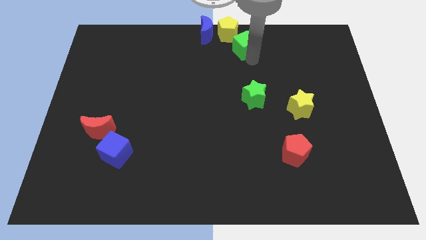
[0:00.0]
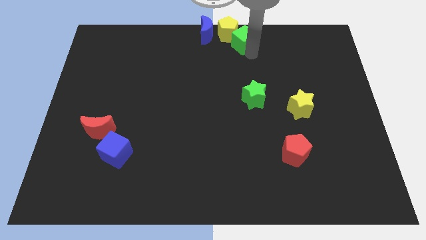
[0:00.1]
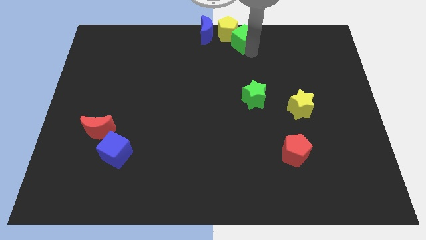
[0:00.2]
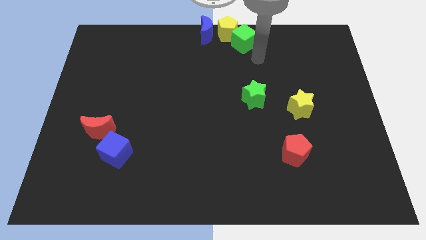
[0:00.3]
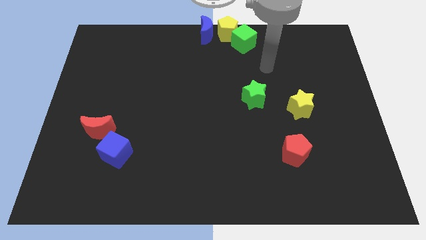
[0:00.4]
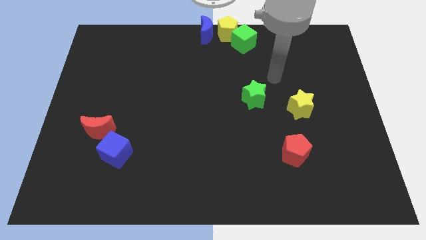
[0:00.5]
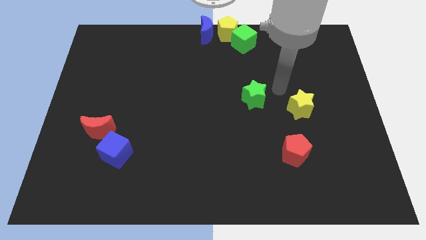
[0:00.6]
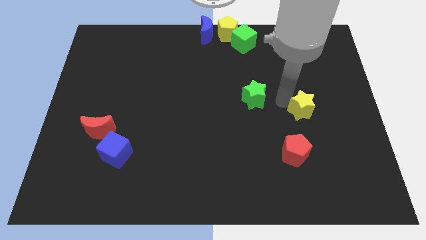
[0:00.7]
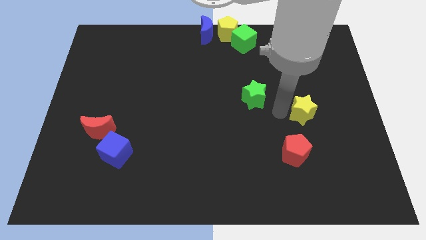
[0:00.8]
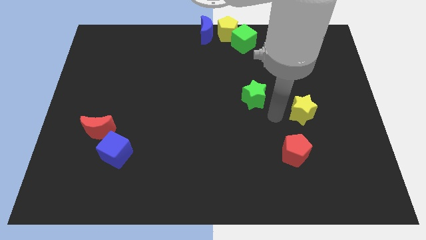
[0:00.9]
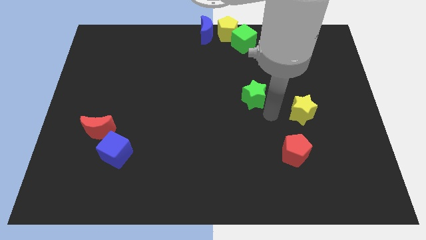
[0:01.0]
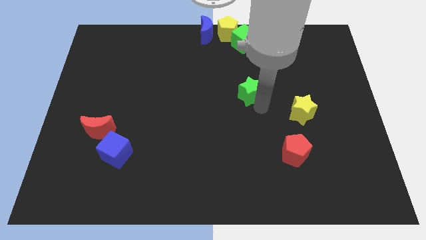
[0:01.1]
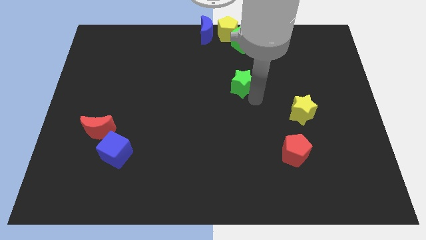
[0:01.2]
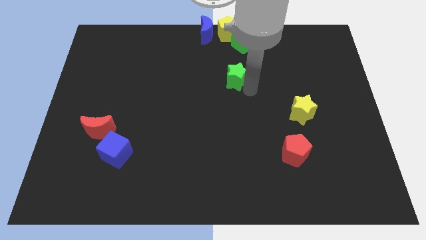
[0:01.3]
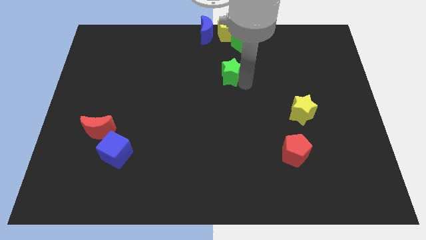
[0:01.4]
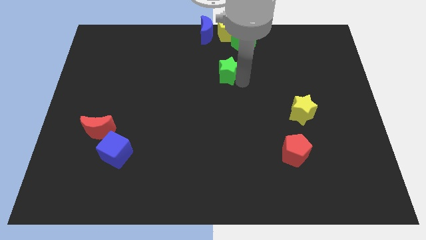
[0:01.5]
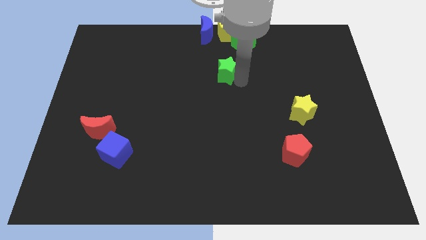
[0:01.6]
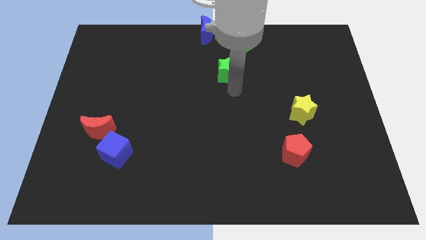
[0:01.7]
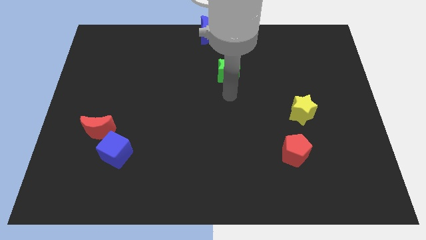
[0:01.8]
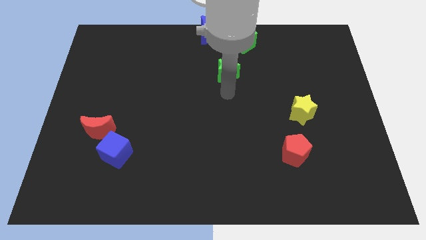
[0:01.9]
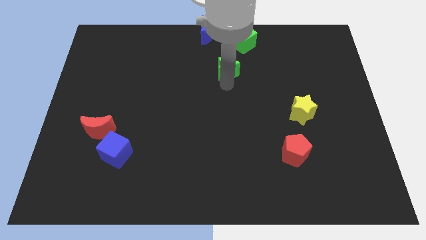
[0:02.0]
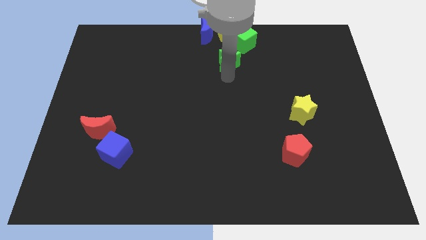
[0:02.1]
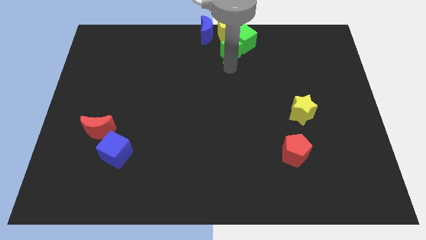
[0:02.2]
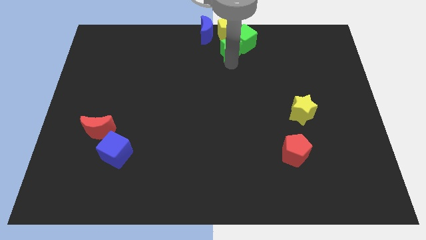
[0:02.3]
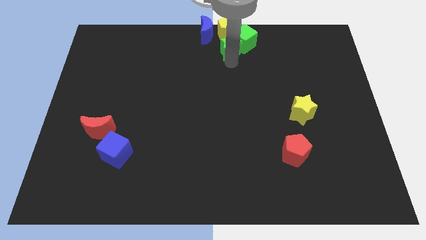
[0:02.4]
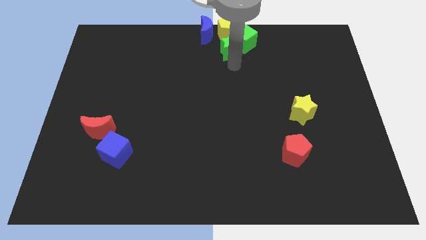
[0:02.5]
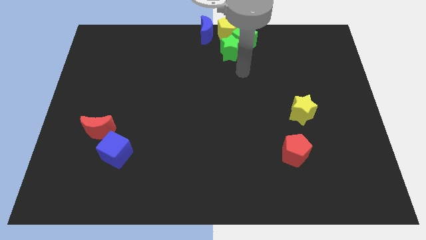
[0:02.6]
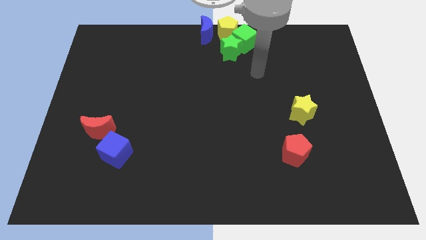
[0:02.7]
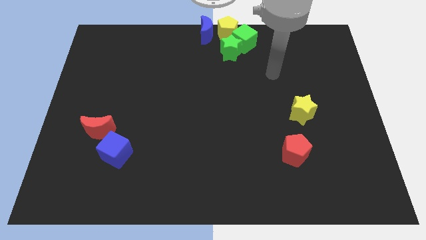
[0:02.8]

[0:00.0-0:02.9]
separate green star from yellow star

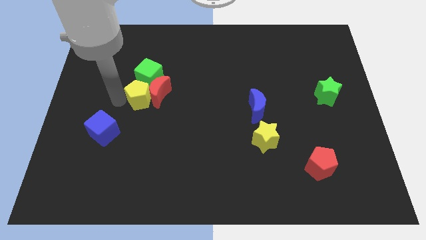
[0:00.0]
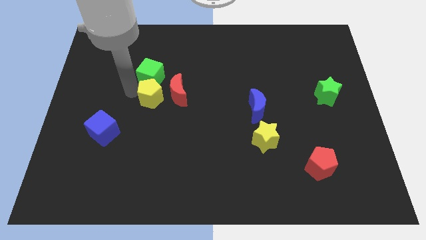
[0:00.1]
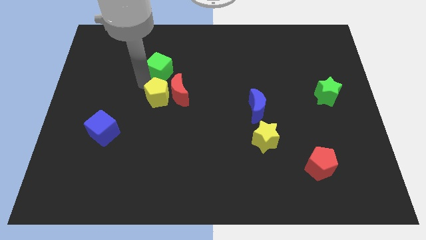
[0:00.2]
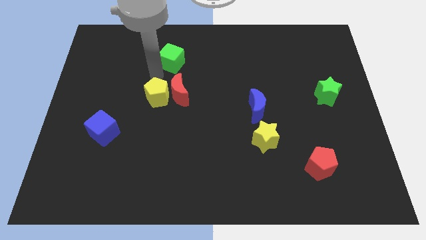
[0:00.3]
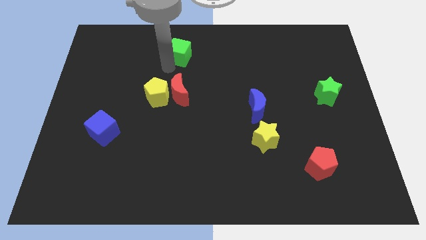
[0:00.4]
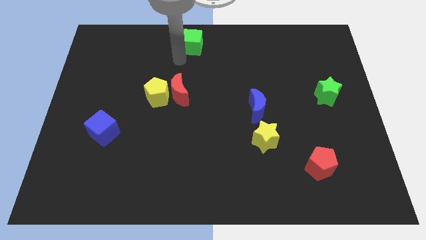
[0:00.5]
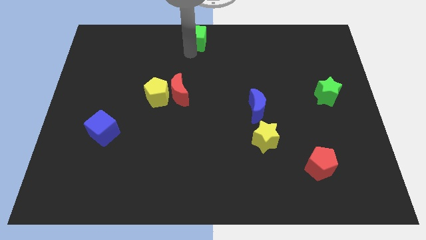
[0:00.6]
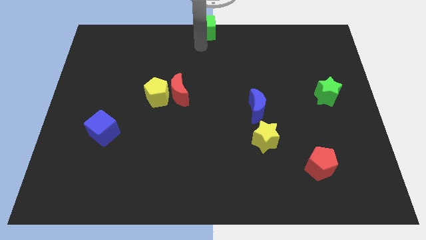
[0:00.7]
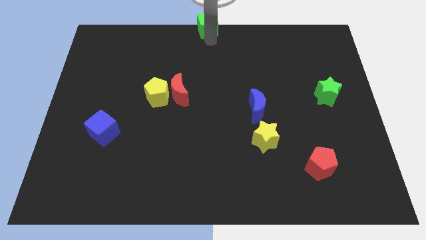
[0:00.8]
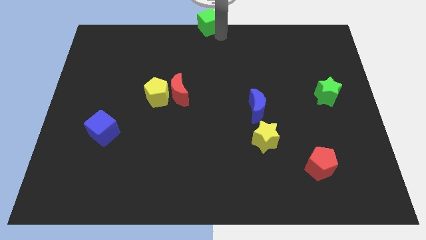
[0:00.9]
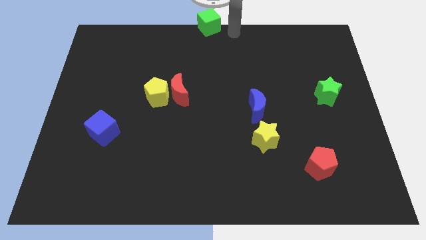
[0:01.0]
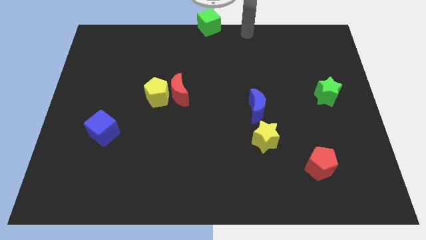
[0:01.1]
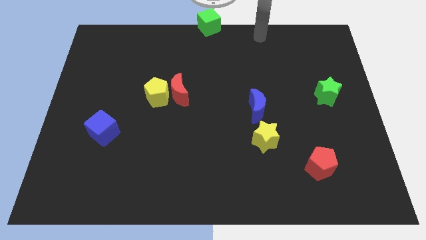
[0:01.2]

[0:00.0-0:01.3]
place the green cube at the top center

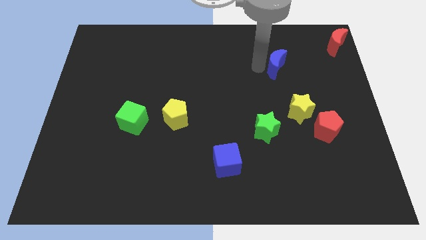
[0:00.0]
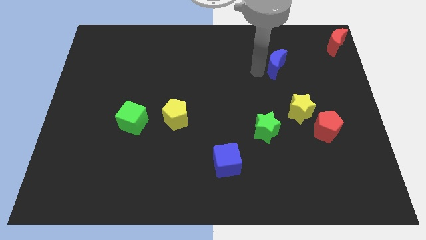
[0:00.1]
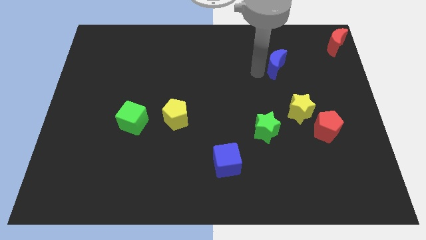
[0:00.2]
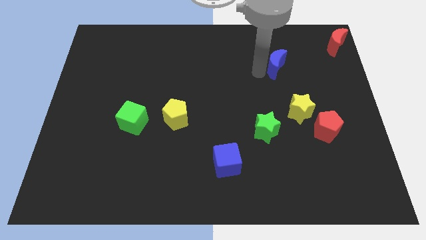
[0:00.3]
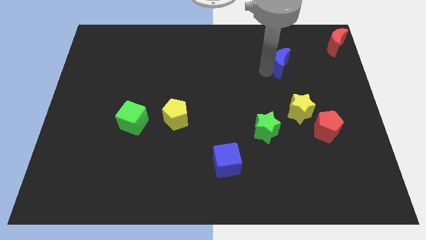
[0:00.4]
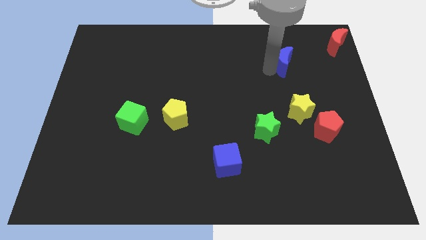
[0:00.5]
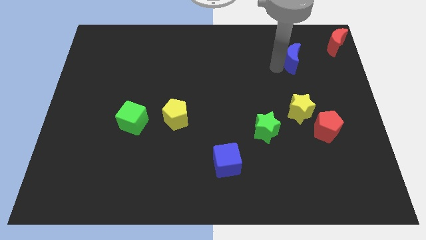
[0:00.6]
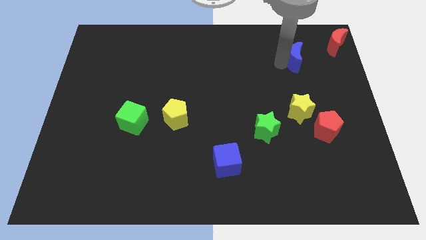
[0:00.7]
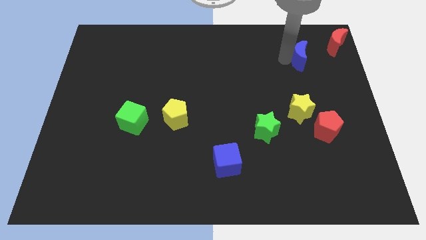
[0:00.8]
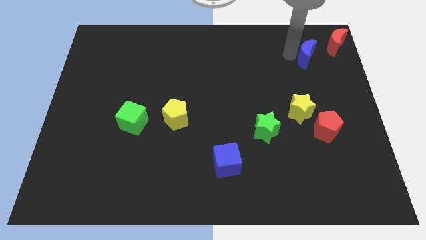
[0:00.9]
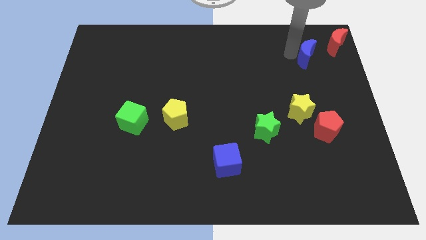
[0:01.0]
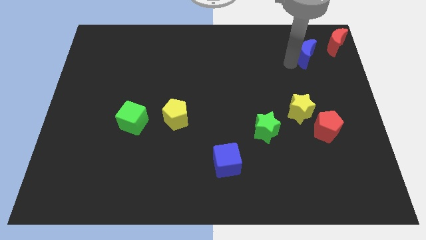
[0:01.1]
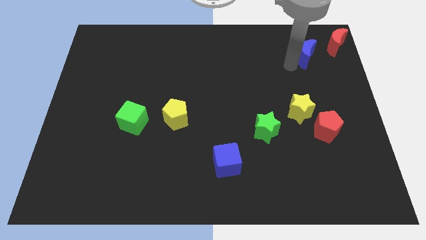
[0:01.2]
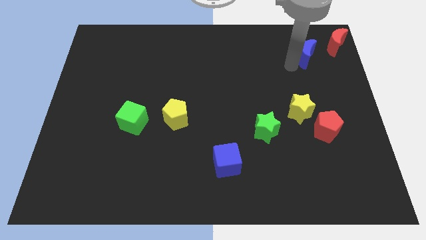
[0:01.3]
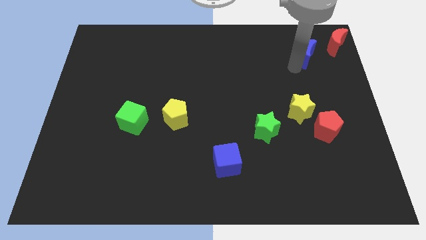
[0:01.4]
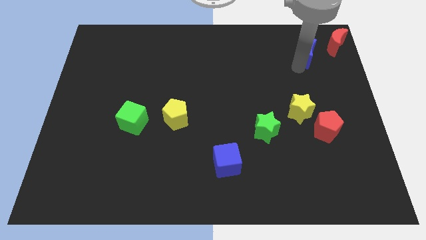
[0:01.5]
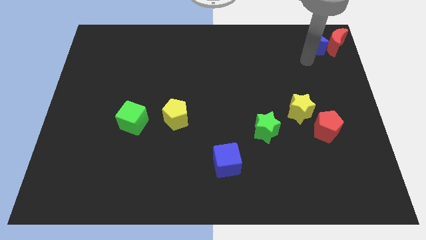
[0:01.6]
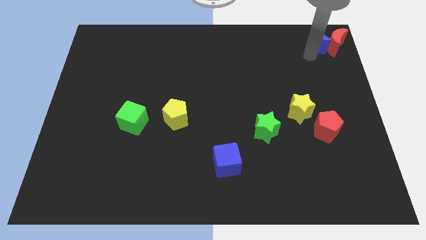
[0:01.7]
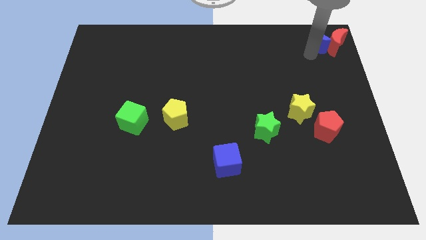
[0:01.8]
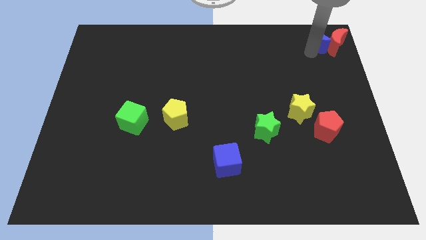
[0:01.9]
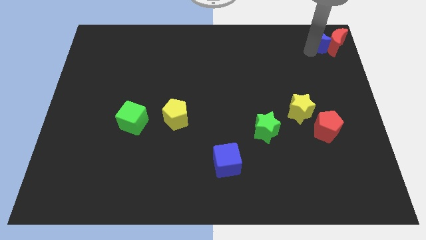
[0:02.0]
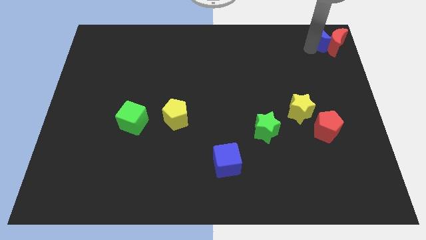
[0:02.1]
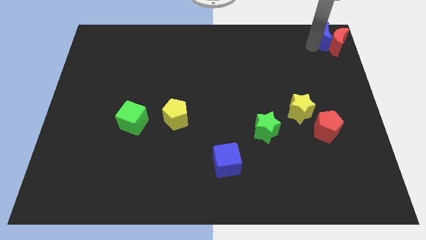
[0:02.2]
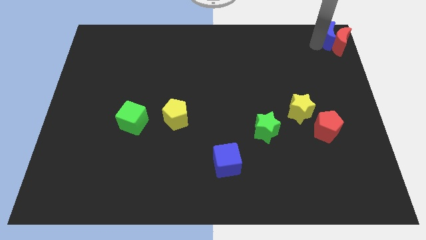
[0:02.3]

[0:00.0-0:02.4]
move blue moon into the left of red moon

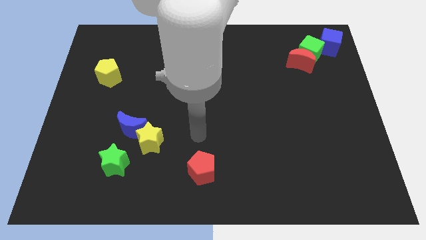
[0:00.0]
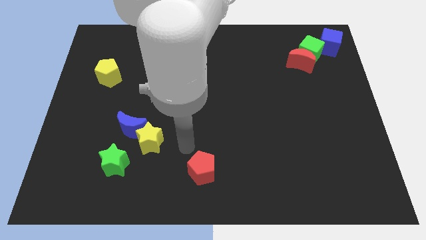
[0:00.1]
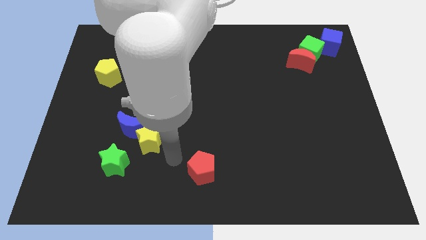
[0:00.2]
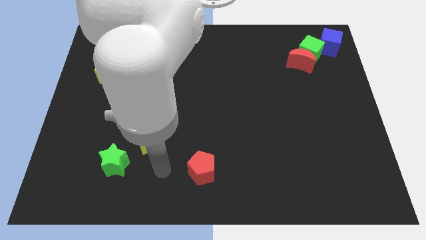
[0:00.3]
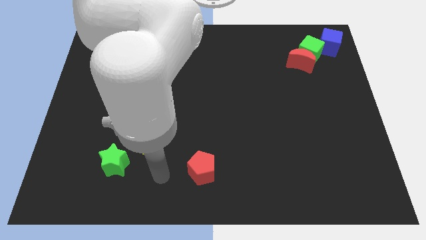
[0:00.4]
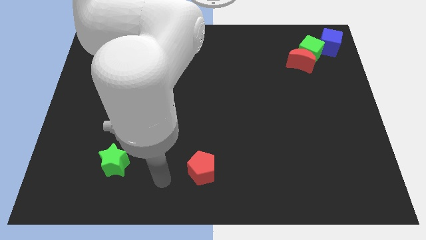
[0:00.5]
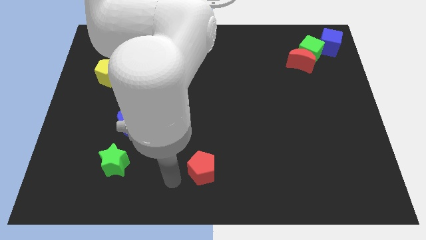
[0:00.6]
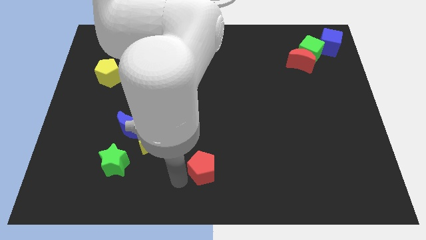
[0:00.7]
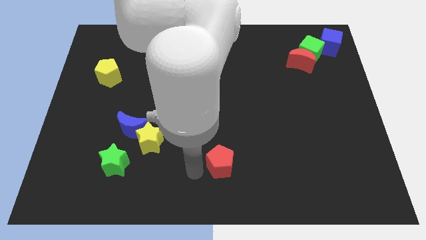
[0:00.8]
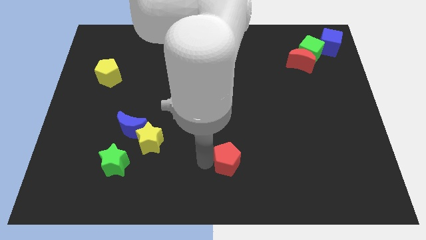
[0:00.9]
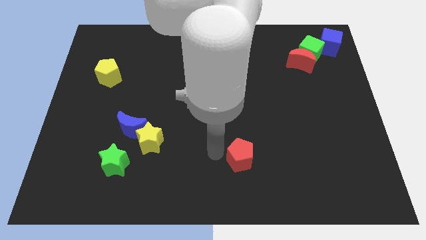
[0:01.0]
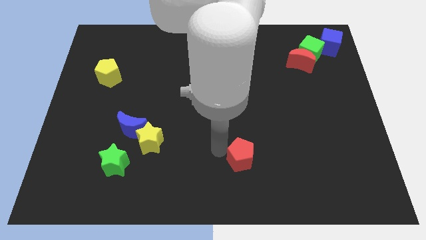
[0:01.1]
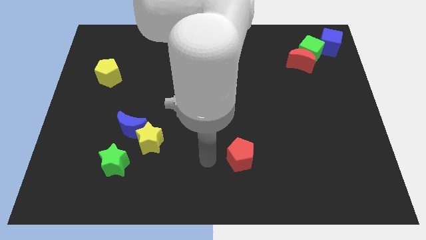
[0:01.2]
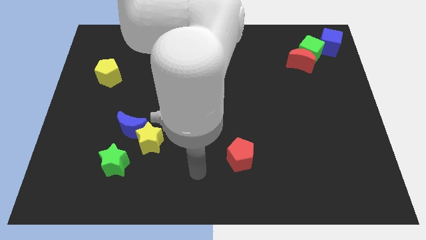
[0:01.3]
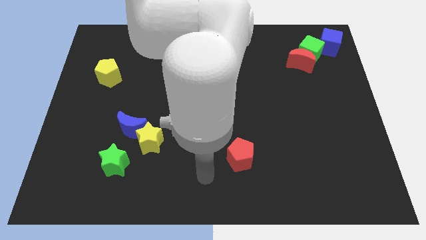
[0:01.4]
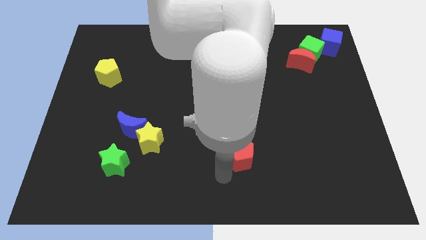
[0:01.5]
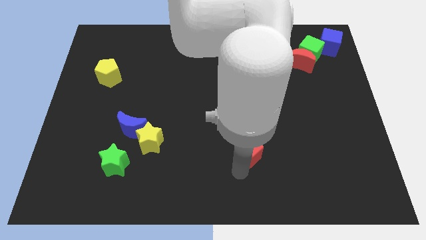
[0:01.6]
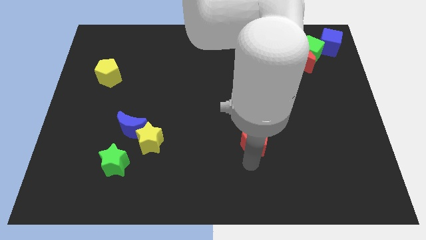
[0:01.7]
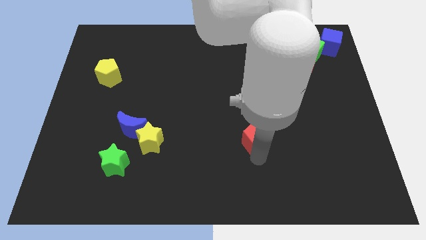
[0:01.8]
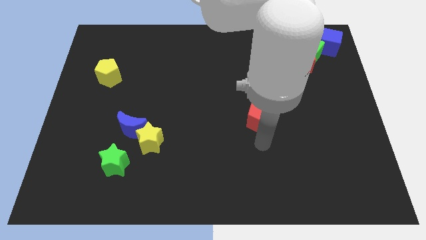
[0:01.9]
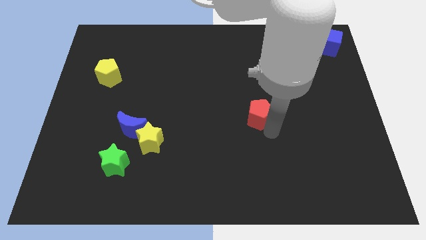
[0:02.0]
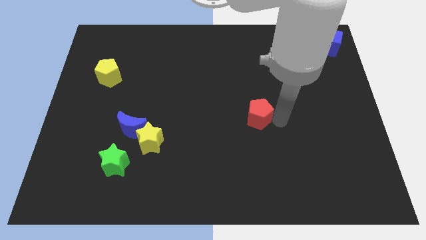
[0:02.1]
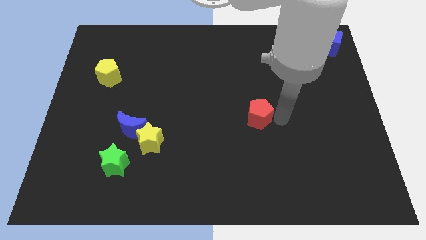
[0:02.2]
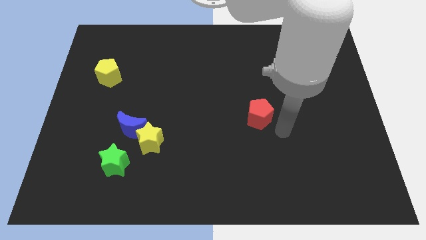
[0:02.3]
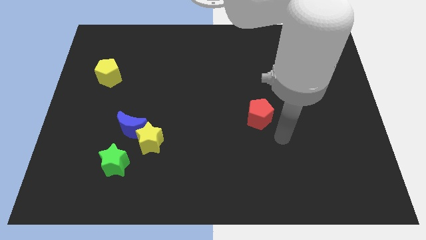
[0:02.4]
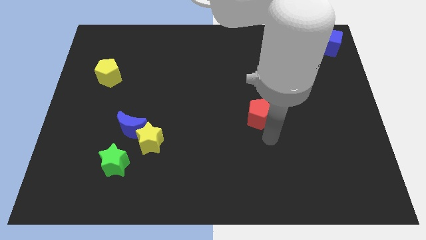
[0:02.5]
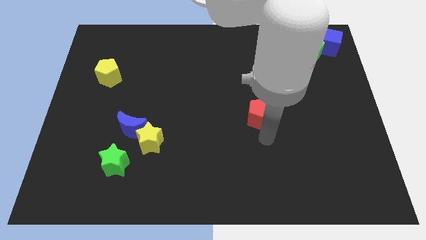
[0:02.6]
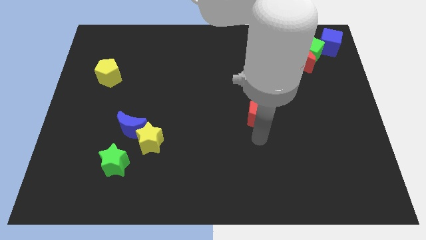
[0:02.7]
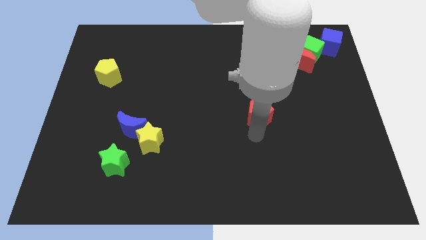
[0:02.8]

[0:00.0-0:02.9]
push the red pentagon slightly to the top of the board
